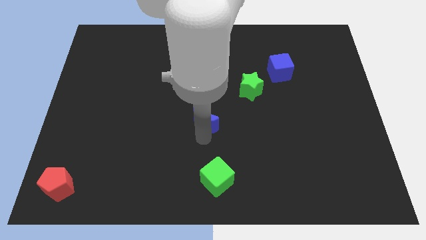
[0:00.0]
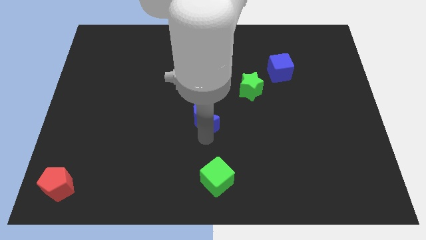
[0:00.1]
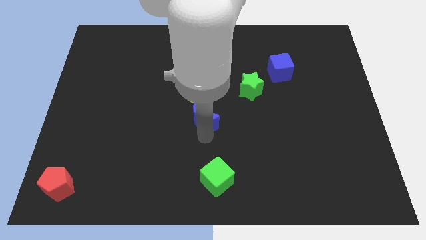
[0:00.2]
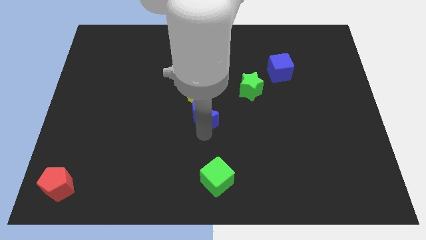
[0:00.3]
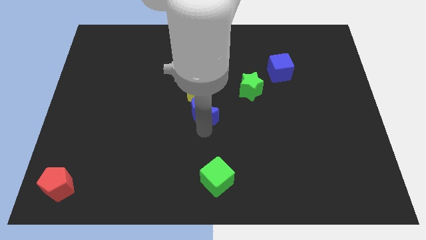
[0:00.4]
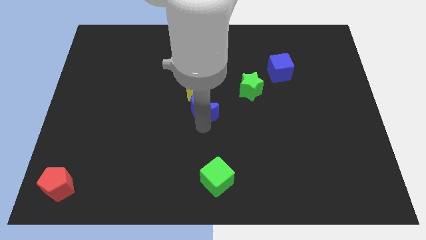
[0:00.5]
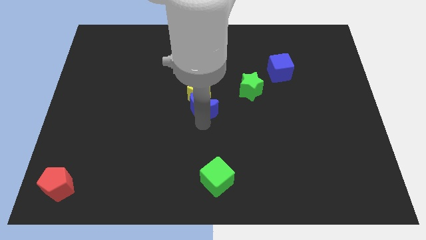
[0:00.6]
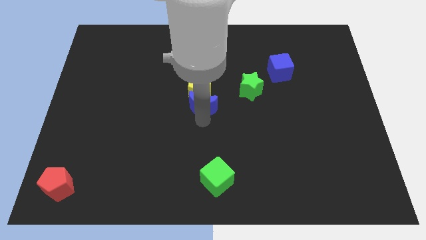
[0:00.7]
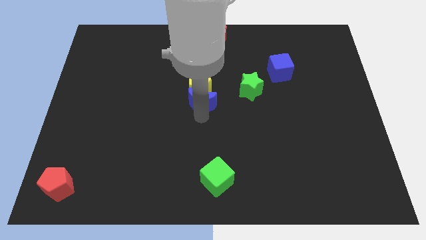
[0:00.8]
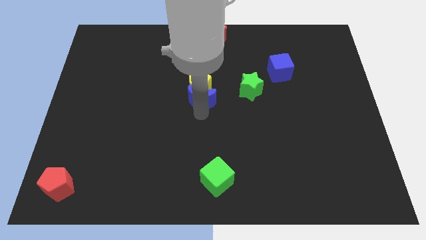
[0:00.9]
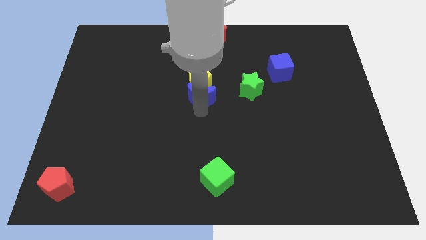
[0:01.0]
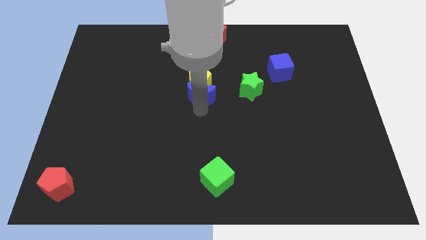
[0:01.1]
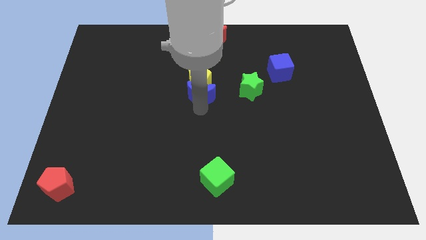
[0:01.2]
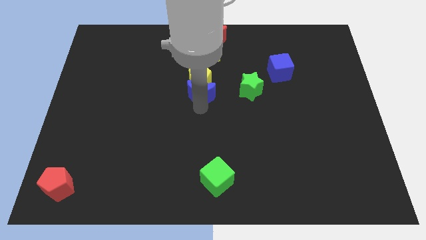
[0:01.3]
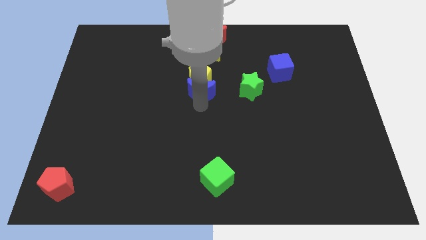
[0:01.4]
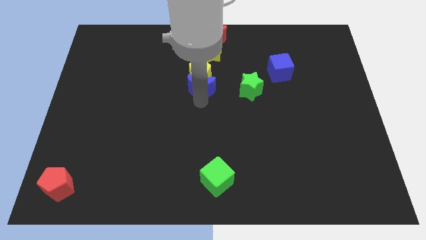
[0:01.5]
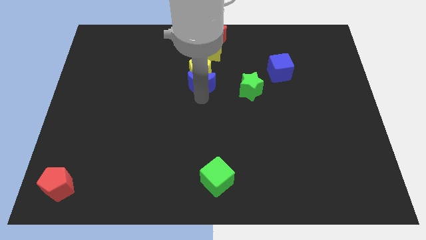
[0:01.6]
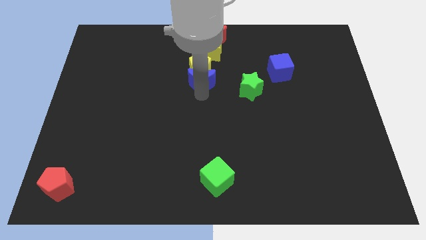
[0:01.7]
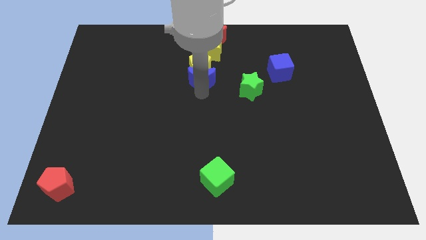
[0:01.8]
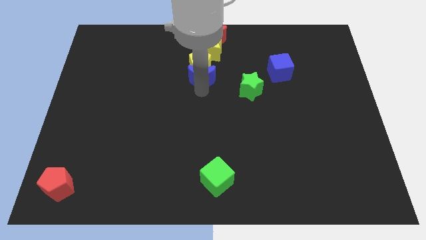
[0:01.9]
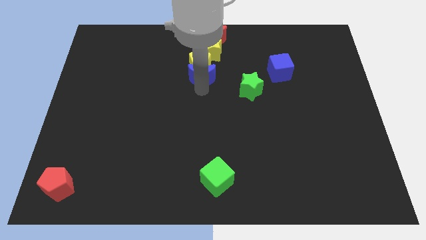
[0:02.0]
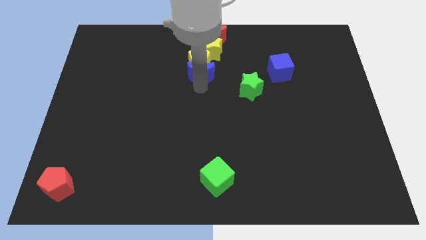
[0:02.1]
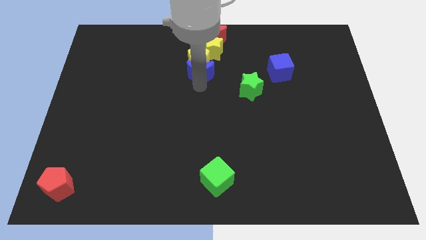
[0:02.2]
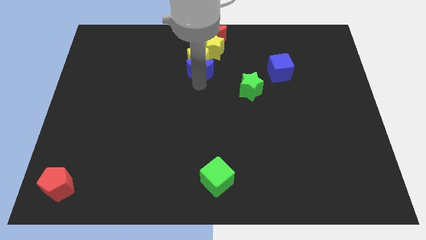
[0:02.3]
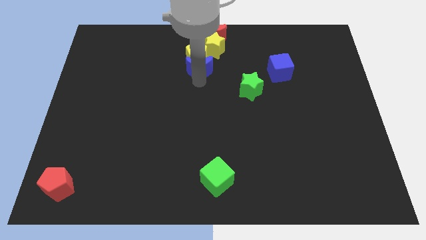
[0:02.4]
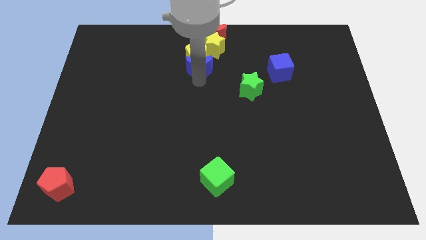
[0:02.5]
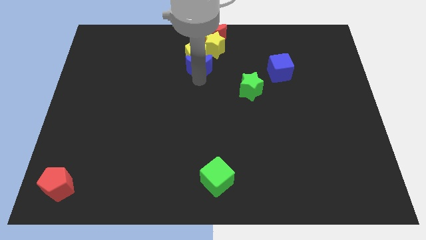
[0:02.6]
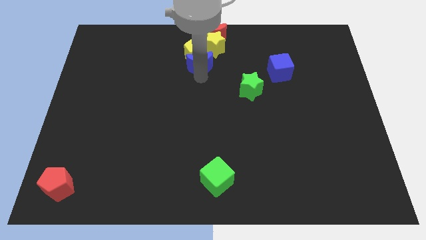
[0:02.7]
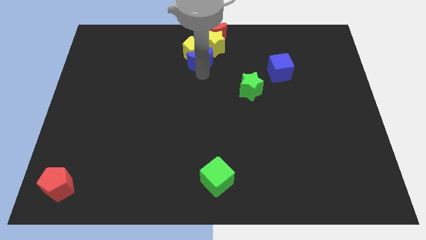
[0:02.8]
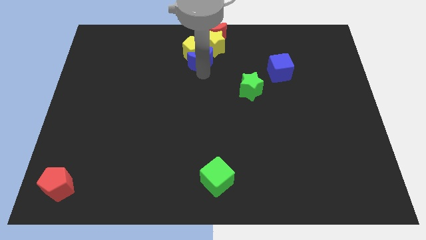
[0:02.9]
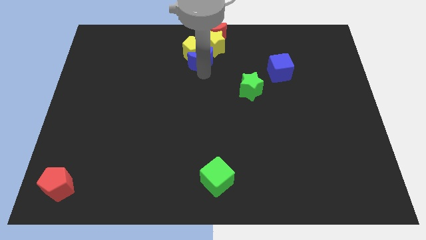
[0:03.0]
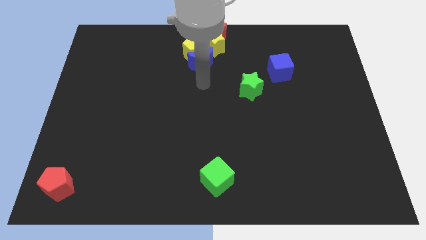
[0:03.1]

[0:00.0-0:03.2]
push the blue moon and the yellow pentagon into the yellow star

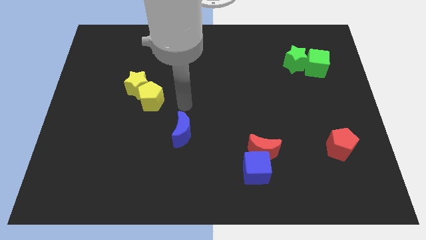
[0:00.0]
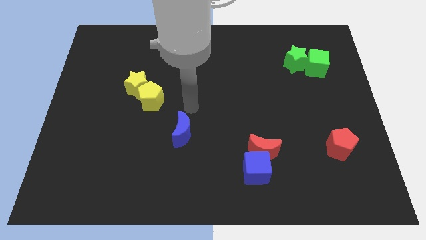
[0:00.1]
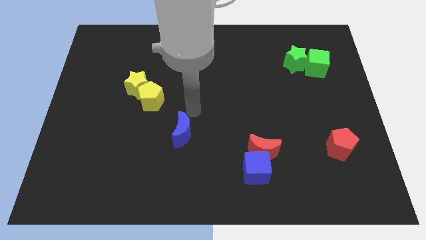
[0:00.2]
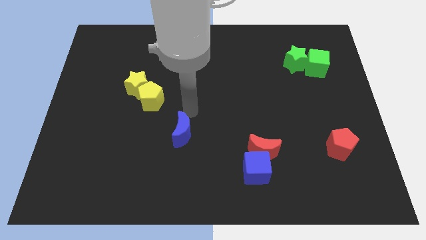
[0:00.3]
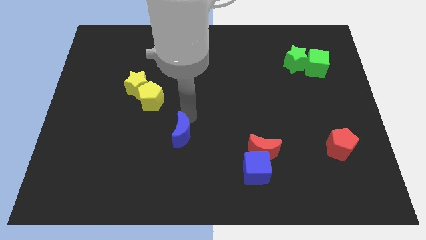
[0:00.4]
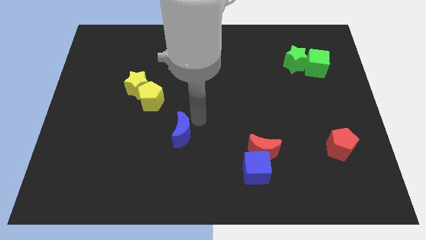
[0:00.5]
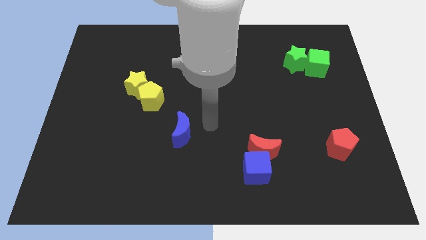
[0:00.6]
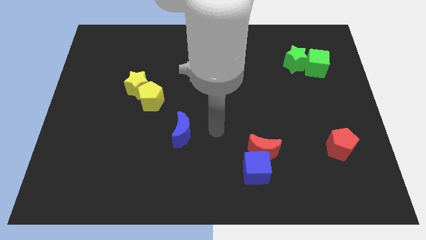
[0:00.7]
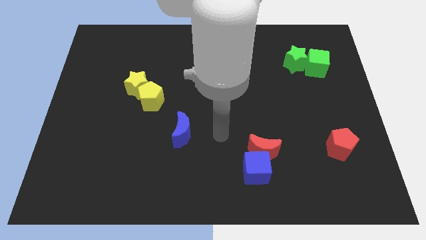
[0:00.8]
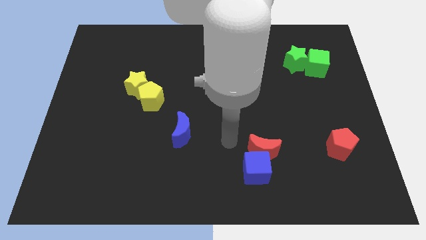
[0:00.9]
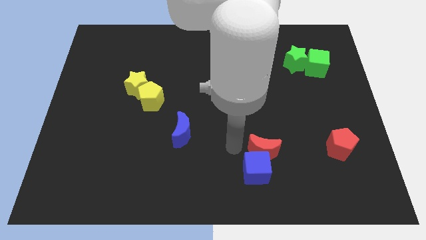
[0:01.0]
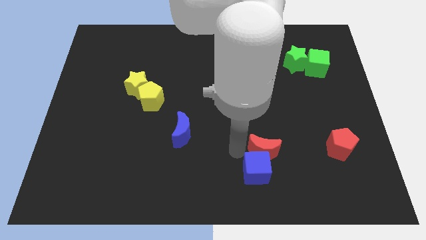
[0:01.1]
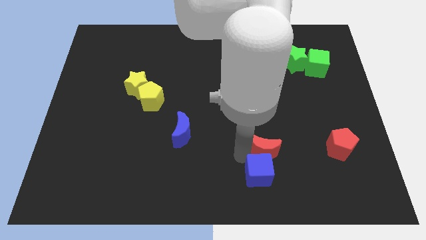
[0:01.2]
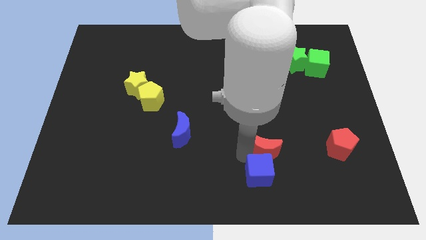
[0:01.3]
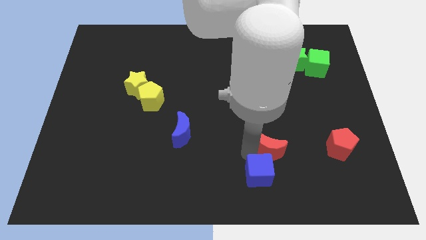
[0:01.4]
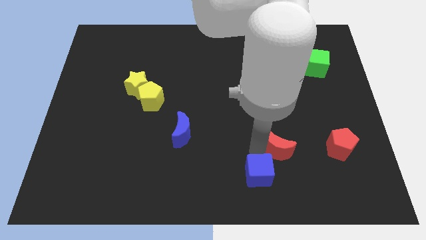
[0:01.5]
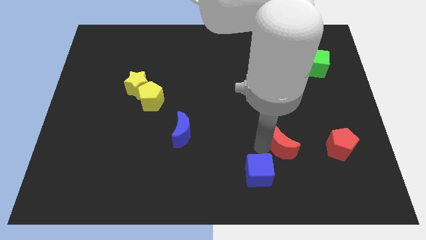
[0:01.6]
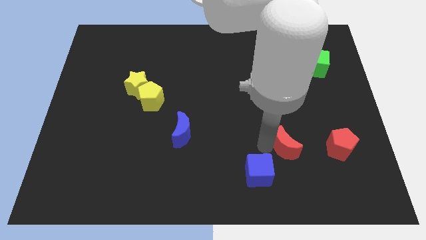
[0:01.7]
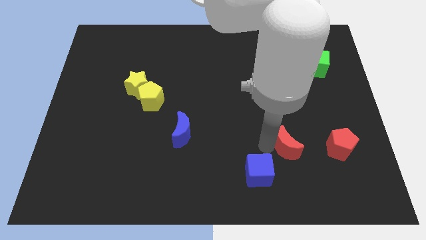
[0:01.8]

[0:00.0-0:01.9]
separate red crescent from blue crescent

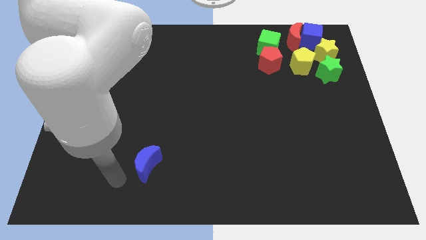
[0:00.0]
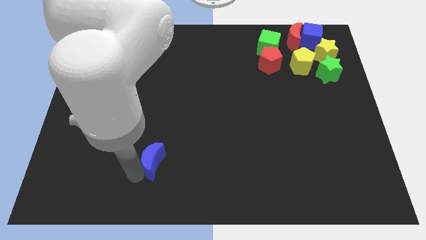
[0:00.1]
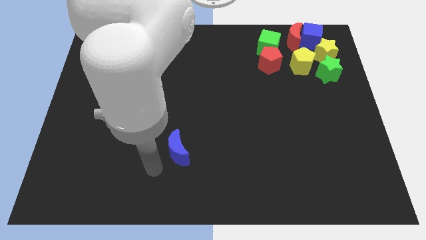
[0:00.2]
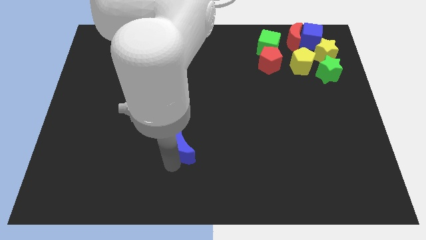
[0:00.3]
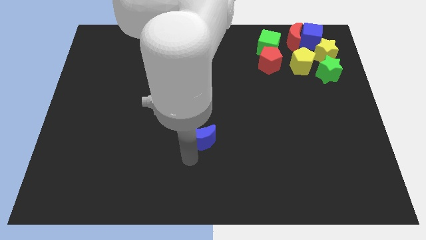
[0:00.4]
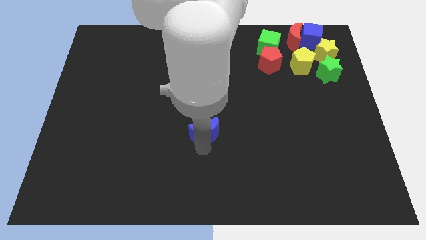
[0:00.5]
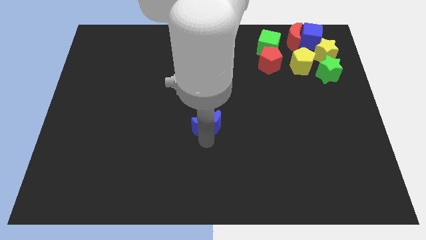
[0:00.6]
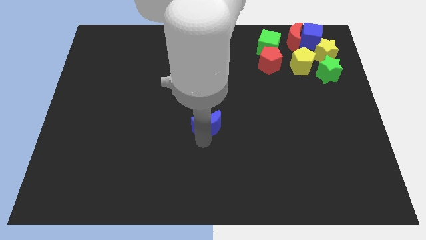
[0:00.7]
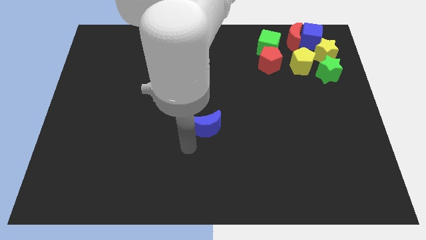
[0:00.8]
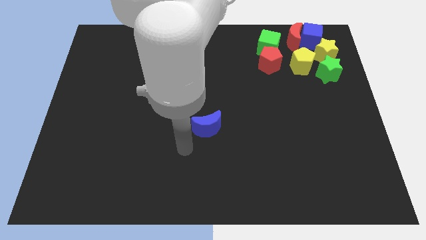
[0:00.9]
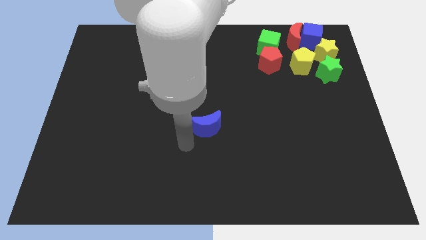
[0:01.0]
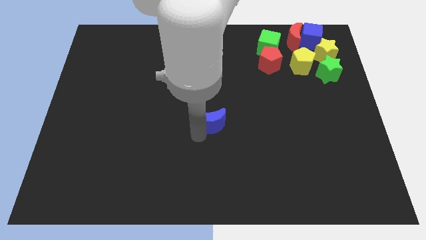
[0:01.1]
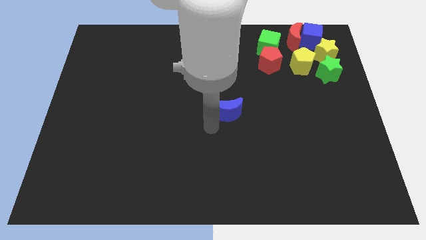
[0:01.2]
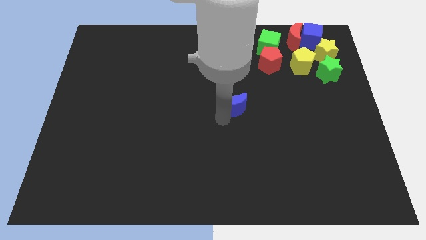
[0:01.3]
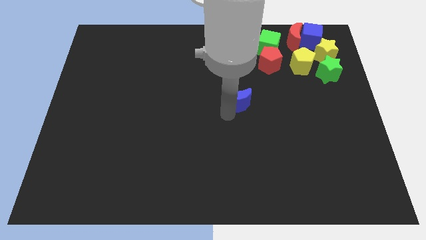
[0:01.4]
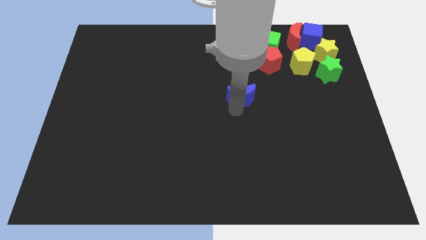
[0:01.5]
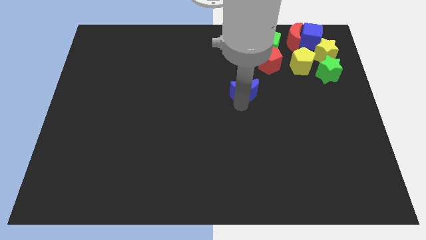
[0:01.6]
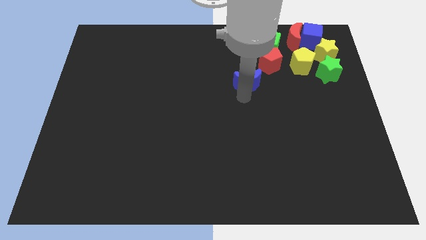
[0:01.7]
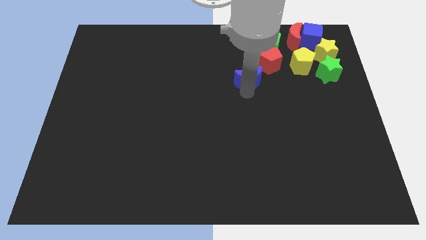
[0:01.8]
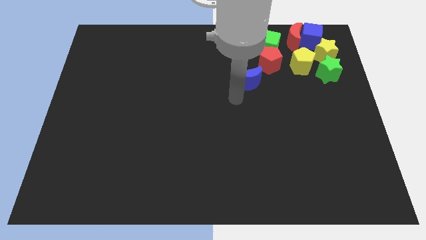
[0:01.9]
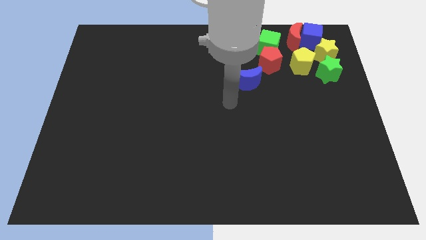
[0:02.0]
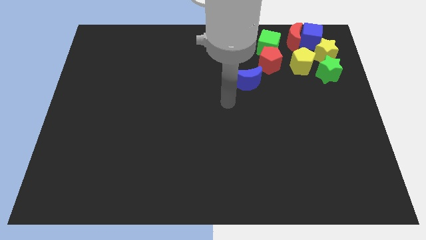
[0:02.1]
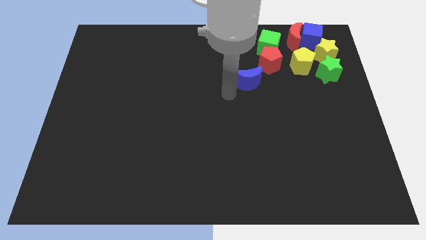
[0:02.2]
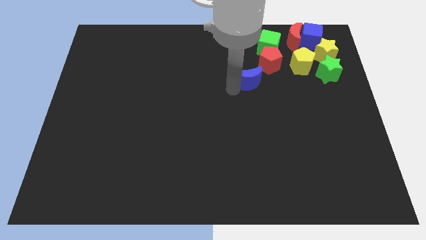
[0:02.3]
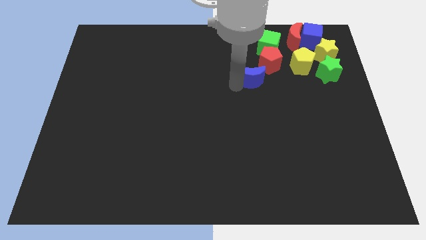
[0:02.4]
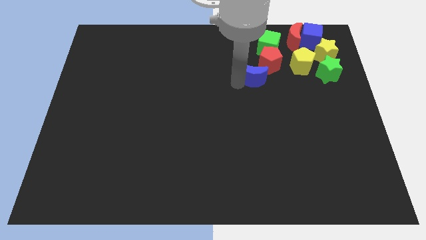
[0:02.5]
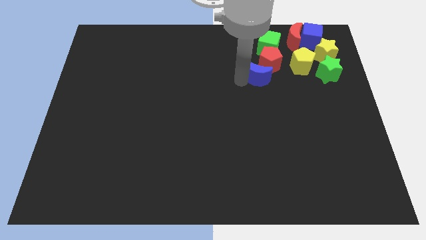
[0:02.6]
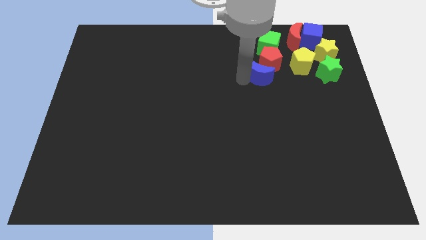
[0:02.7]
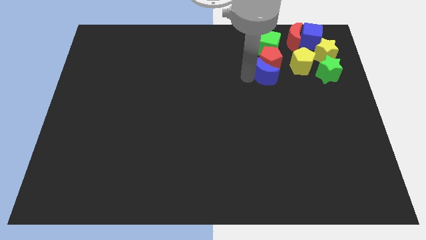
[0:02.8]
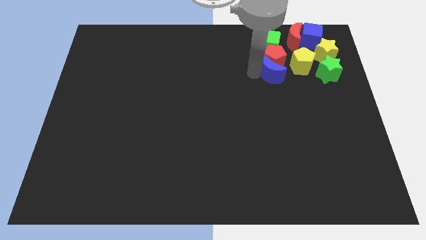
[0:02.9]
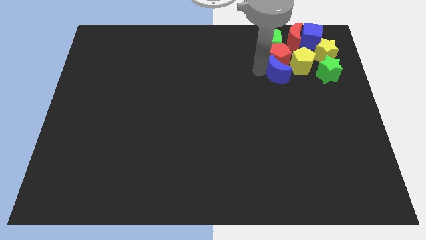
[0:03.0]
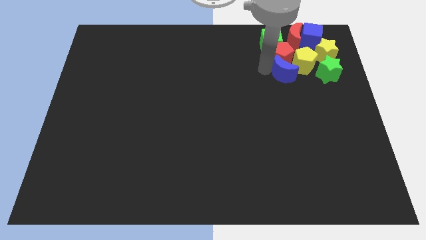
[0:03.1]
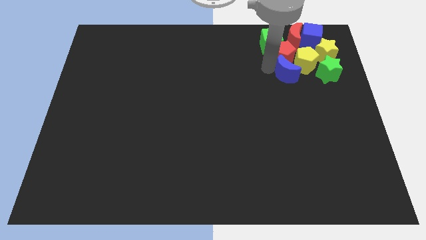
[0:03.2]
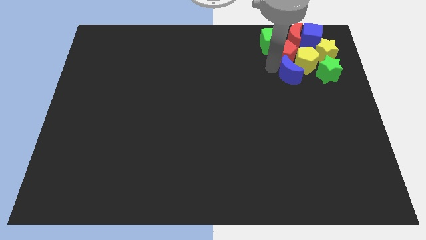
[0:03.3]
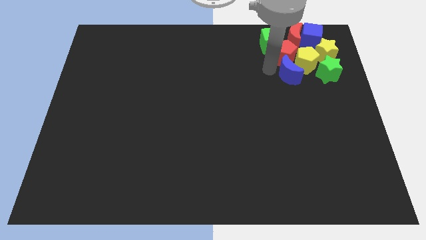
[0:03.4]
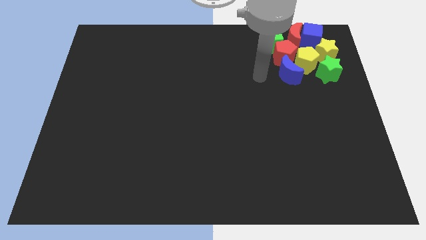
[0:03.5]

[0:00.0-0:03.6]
move blue moon below the twopentagons

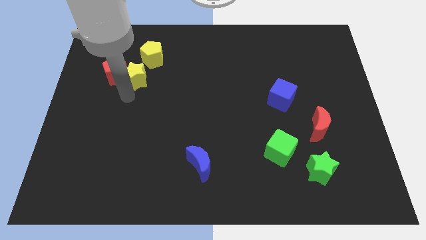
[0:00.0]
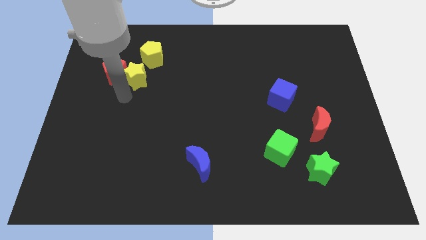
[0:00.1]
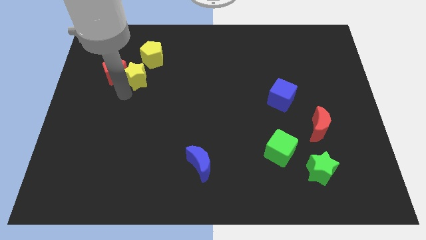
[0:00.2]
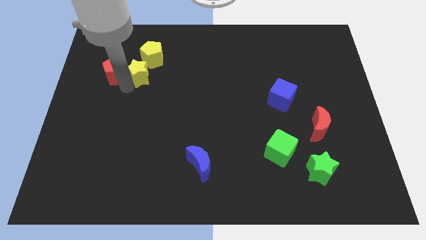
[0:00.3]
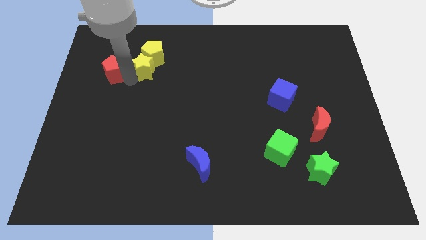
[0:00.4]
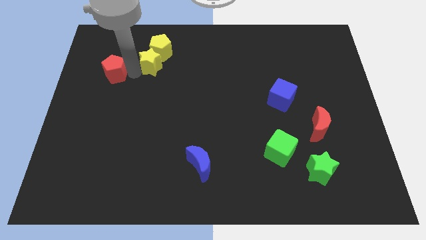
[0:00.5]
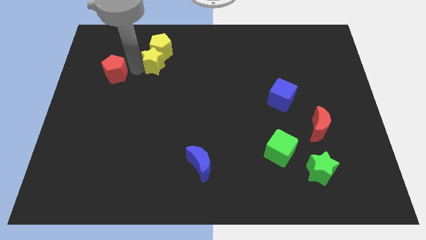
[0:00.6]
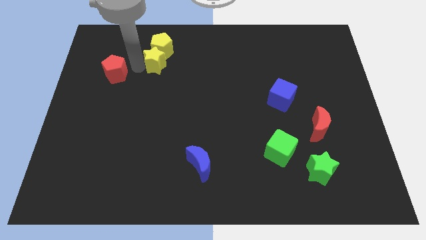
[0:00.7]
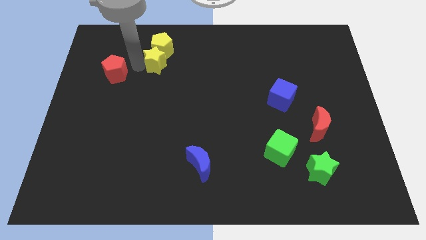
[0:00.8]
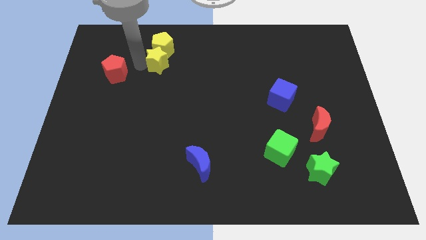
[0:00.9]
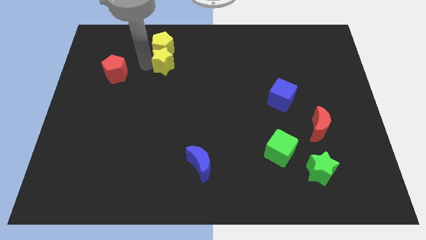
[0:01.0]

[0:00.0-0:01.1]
push the yellow star into the yellow pentagon
